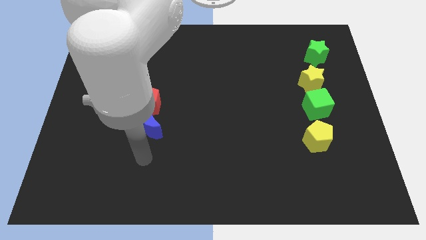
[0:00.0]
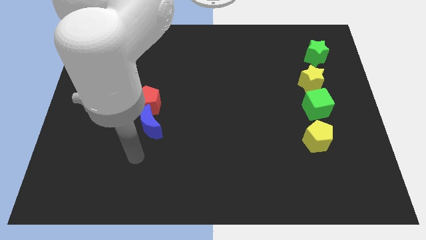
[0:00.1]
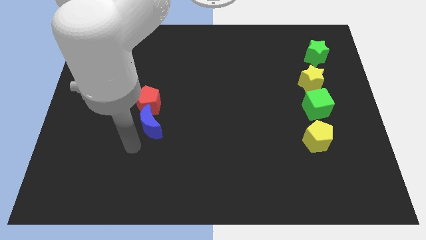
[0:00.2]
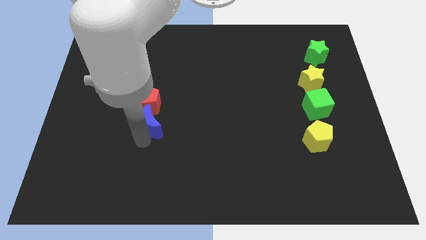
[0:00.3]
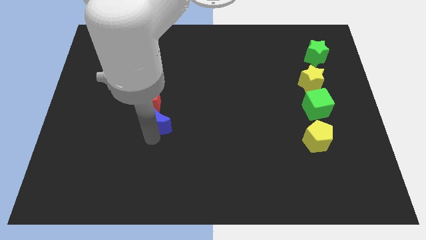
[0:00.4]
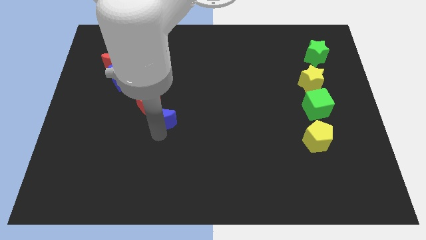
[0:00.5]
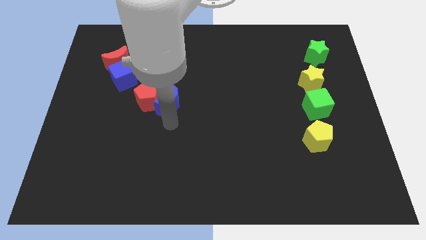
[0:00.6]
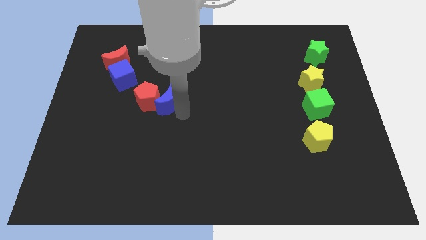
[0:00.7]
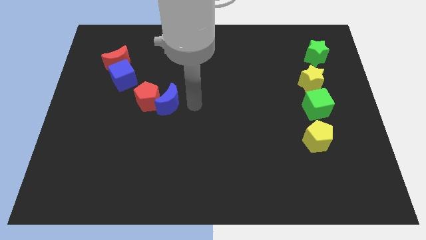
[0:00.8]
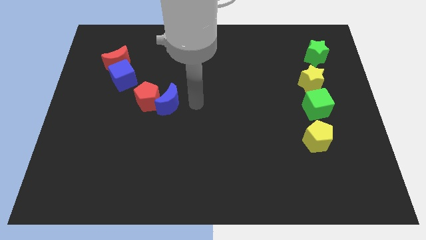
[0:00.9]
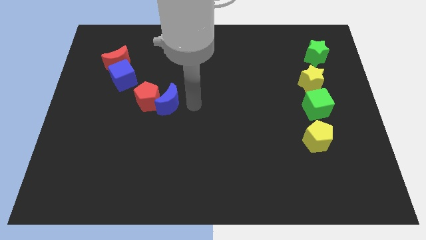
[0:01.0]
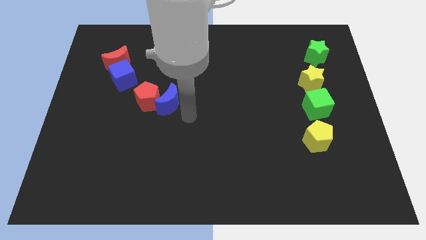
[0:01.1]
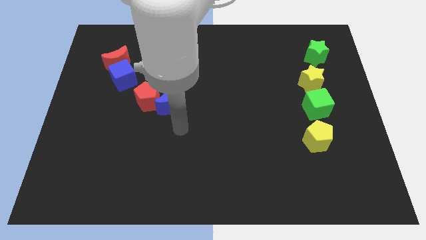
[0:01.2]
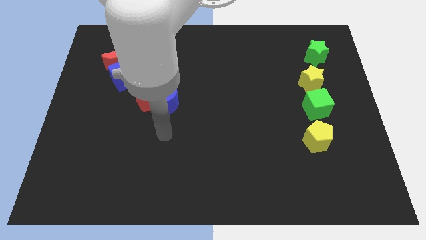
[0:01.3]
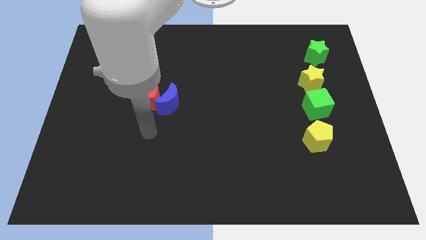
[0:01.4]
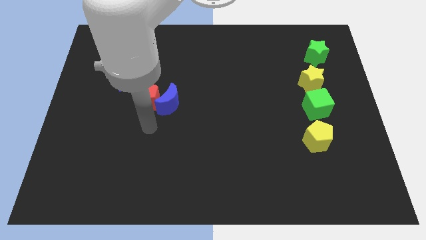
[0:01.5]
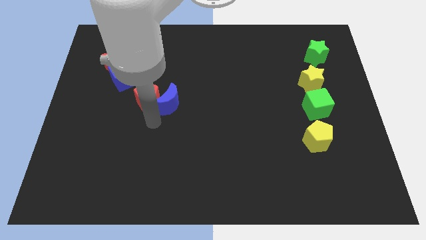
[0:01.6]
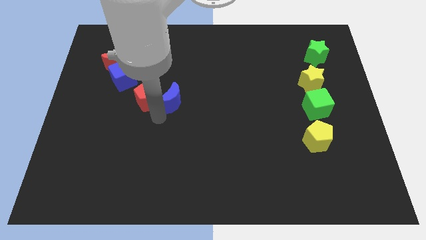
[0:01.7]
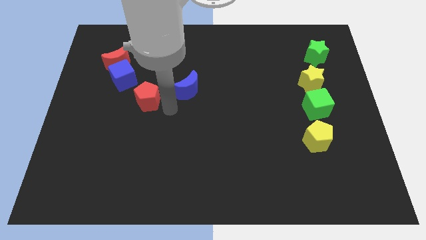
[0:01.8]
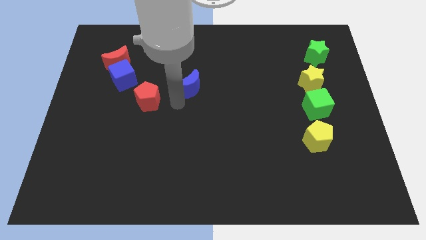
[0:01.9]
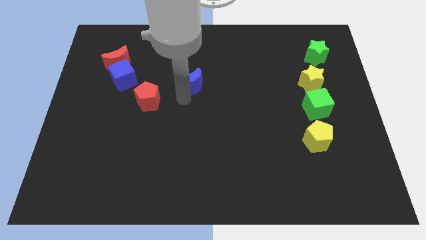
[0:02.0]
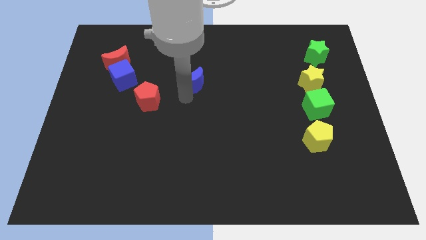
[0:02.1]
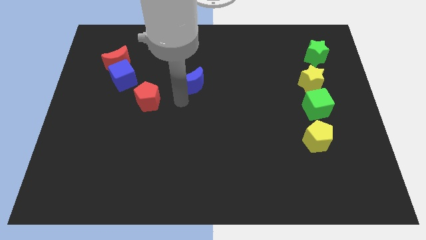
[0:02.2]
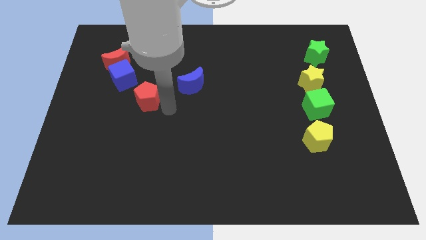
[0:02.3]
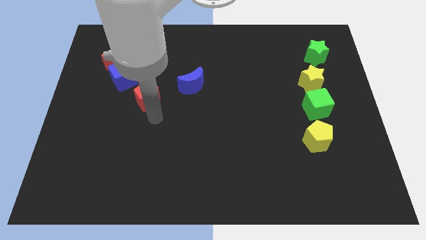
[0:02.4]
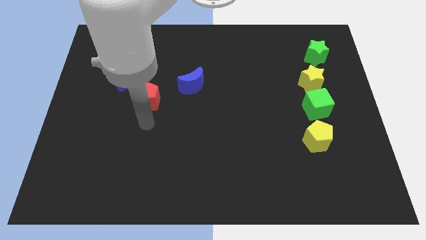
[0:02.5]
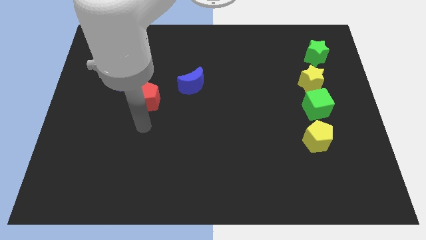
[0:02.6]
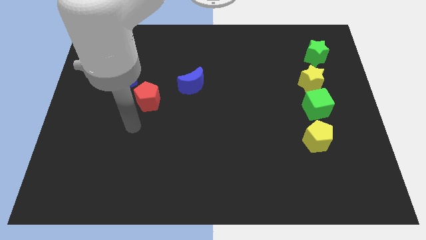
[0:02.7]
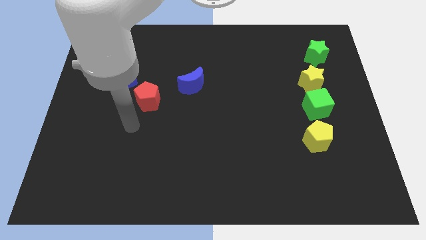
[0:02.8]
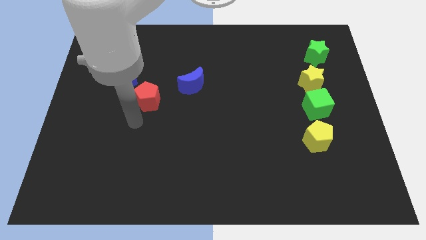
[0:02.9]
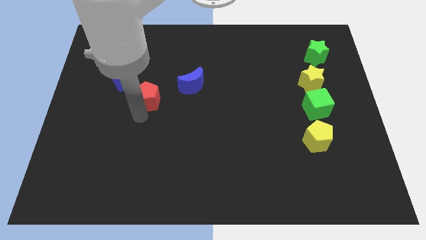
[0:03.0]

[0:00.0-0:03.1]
separate red pentagon and blue moon

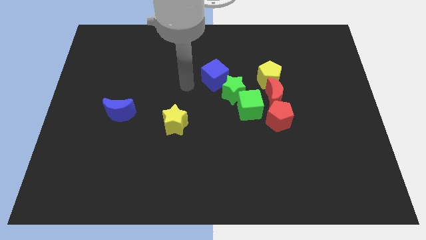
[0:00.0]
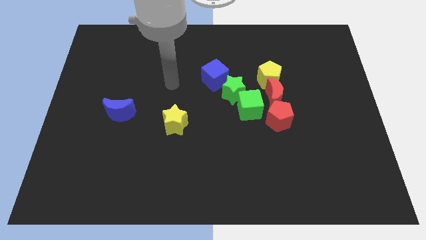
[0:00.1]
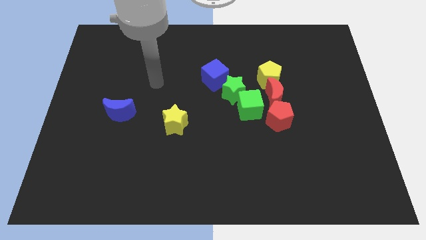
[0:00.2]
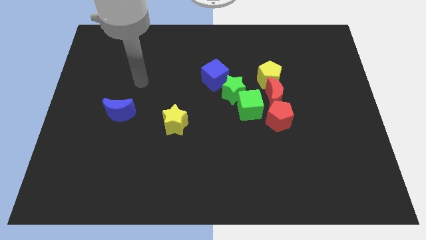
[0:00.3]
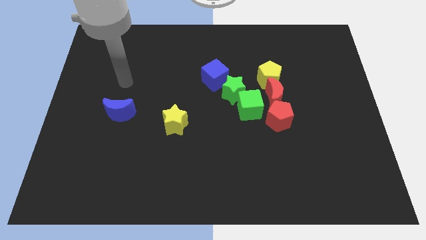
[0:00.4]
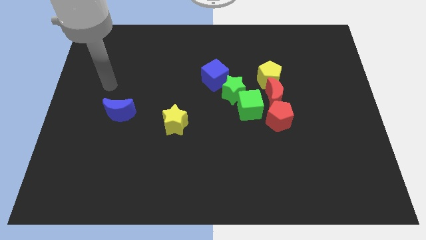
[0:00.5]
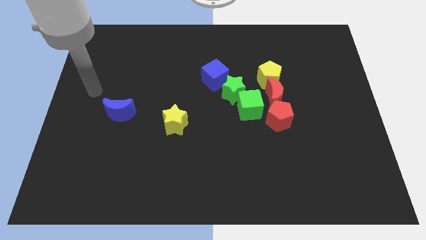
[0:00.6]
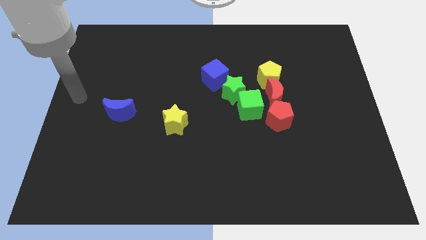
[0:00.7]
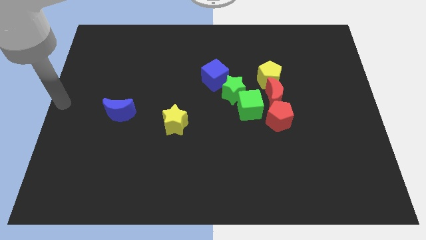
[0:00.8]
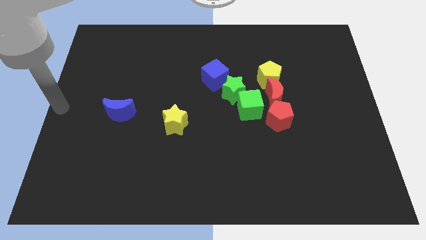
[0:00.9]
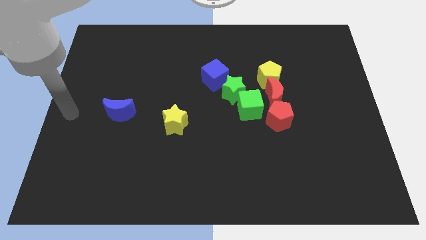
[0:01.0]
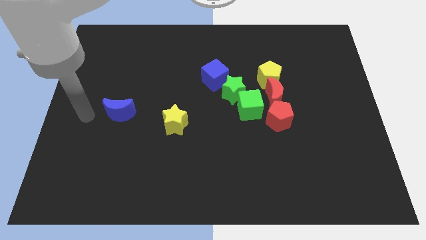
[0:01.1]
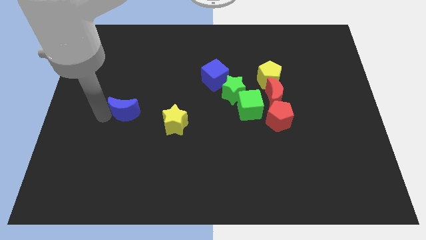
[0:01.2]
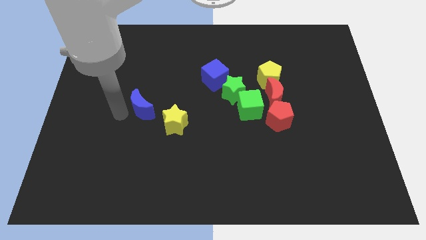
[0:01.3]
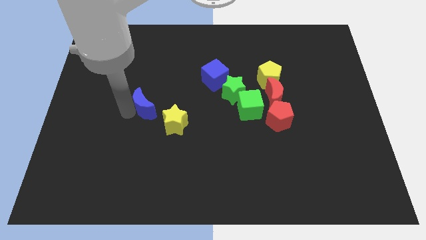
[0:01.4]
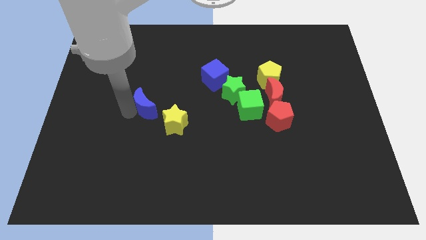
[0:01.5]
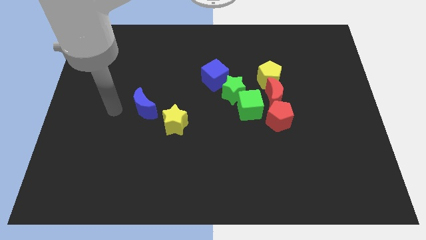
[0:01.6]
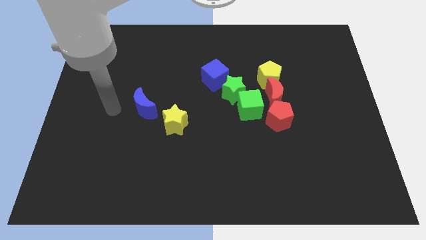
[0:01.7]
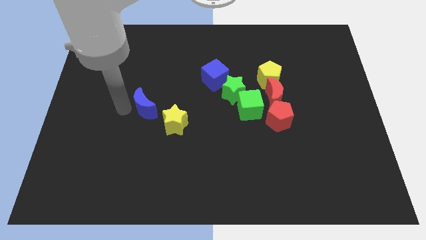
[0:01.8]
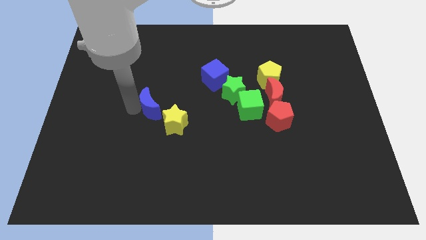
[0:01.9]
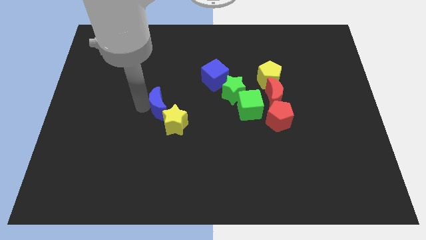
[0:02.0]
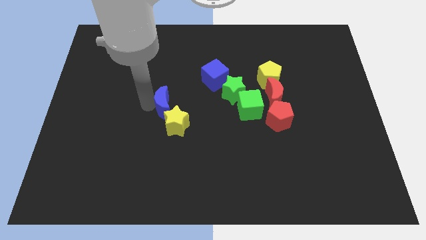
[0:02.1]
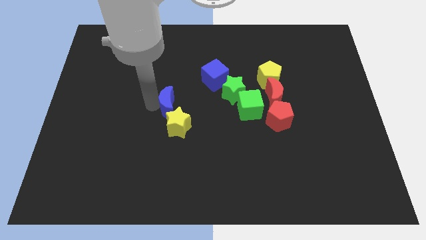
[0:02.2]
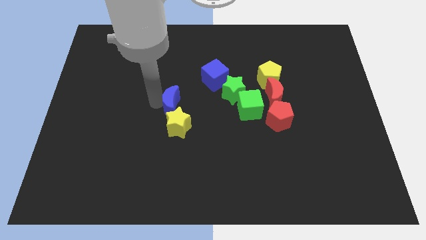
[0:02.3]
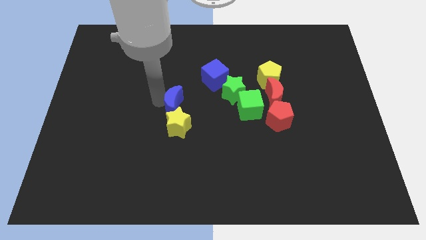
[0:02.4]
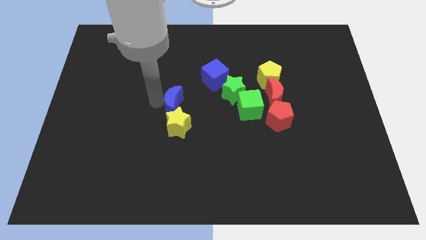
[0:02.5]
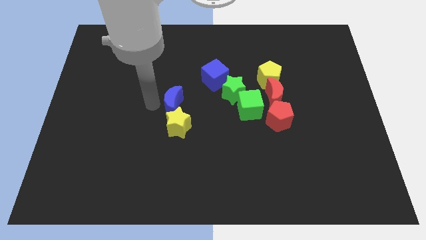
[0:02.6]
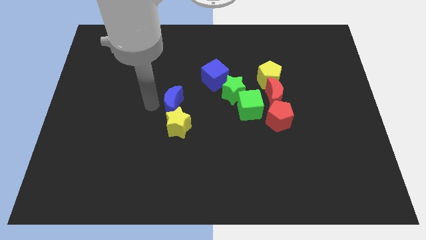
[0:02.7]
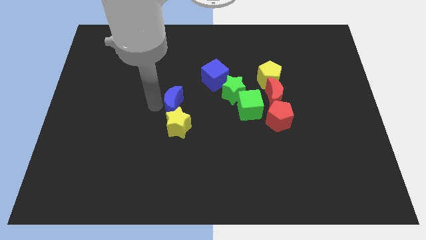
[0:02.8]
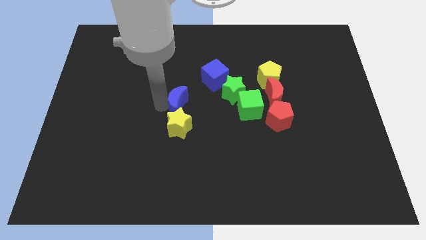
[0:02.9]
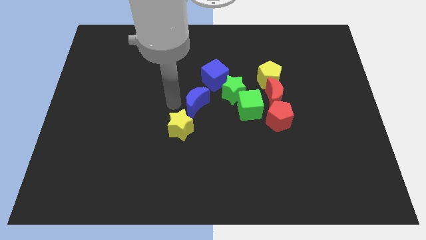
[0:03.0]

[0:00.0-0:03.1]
push the blue crescent to the top right of the yellow star

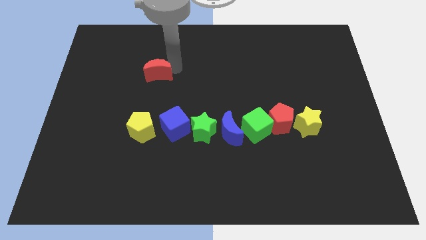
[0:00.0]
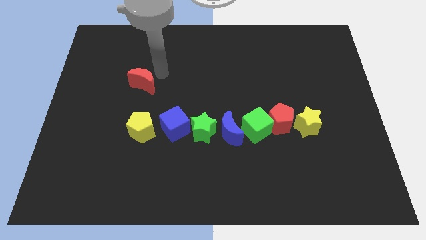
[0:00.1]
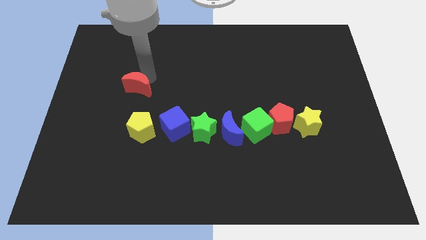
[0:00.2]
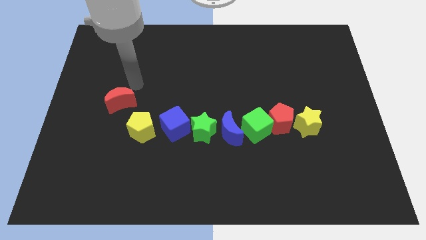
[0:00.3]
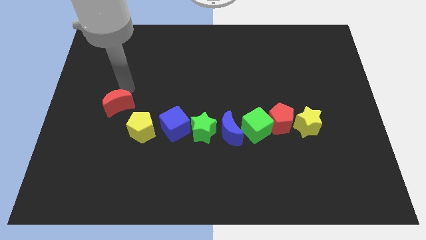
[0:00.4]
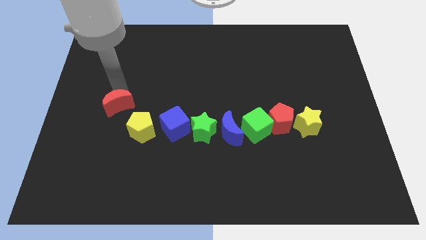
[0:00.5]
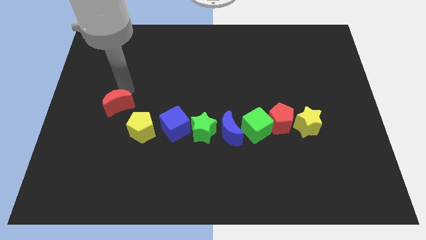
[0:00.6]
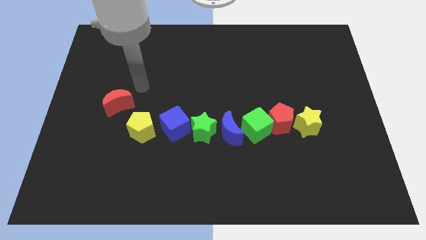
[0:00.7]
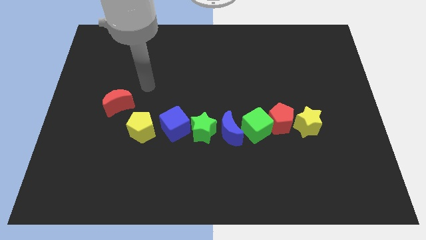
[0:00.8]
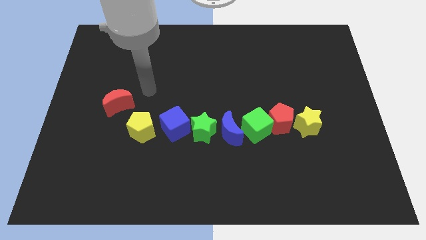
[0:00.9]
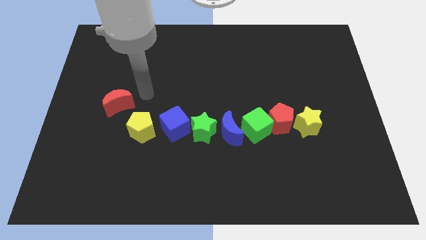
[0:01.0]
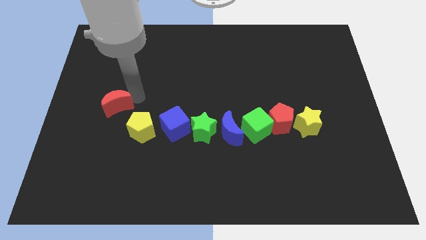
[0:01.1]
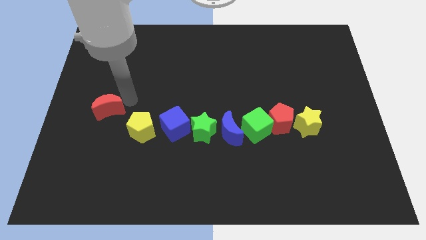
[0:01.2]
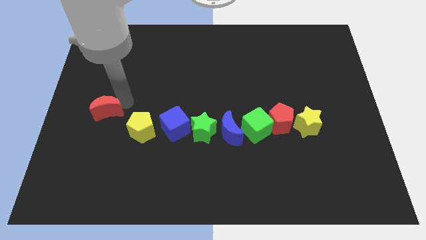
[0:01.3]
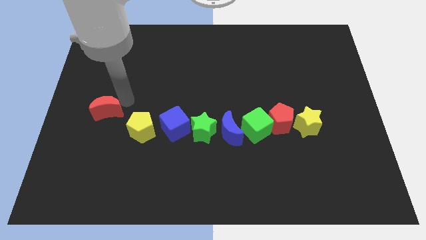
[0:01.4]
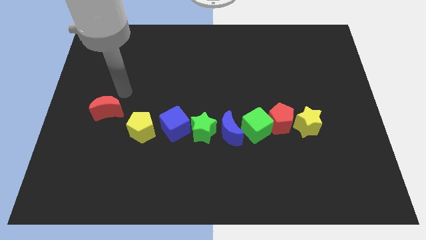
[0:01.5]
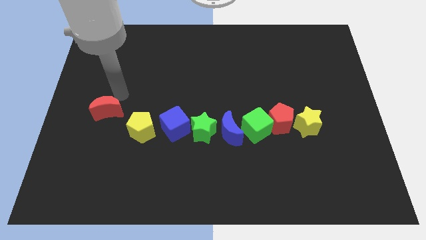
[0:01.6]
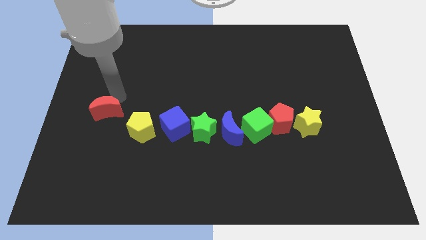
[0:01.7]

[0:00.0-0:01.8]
push the red crescent to the left center

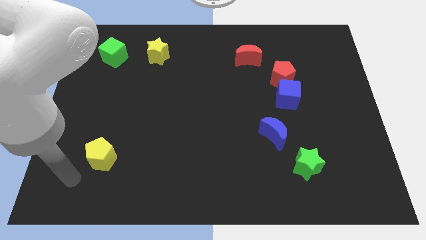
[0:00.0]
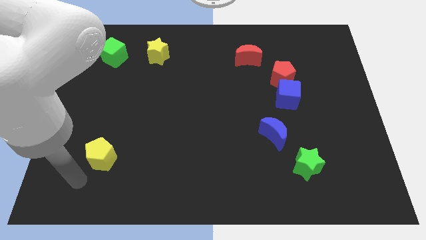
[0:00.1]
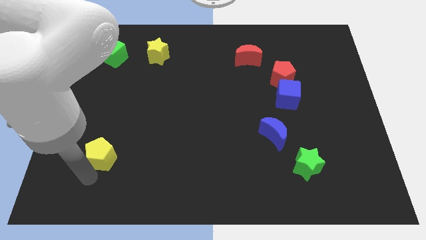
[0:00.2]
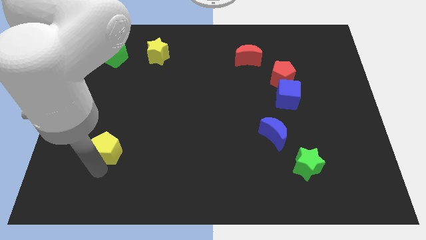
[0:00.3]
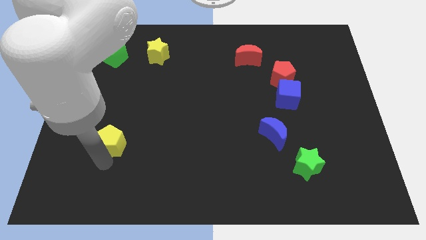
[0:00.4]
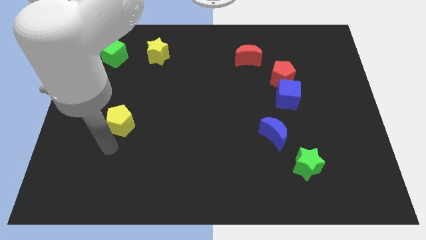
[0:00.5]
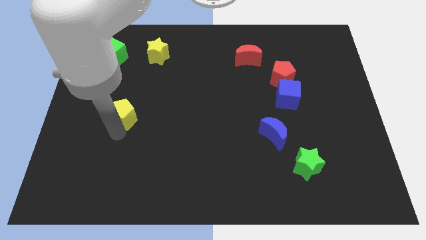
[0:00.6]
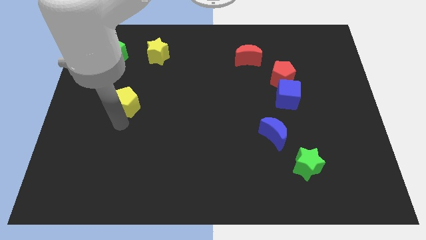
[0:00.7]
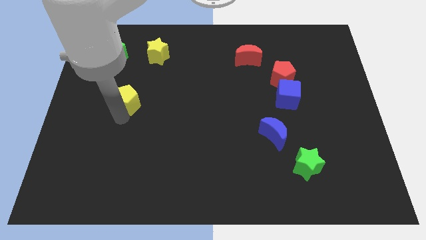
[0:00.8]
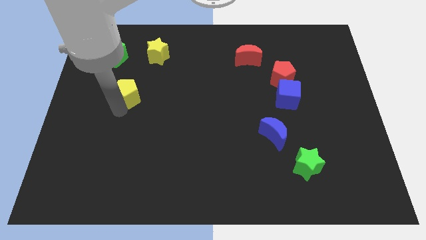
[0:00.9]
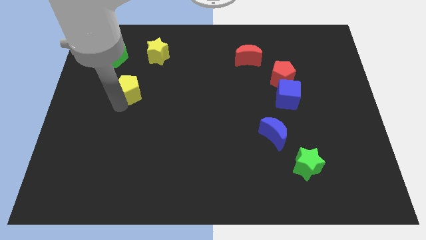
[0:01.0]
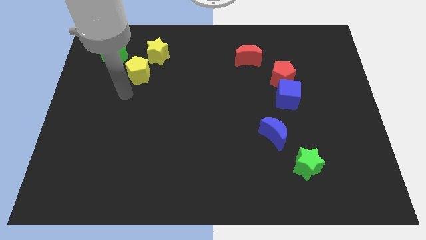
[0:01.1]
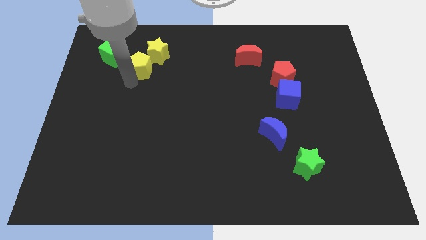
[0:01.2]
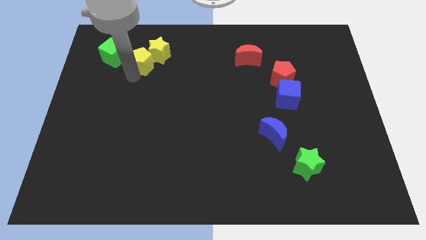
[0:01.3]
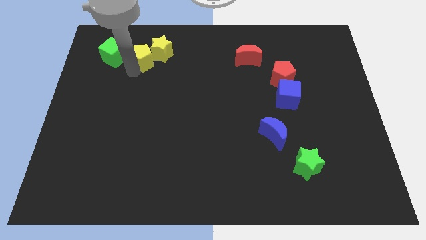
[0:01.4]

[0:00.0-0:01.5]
push the yellow pentagon right to the green cube
